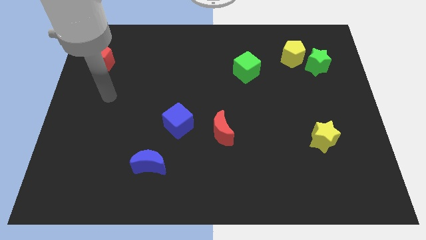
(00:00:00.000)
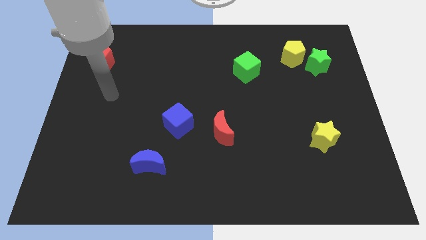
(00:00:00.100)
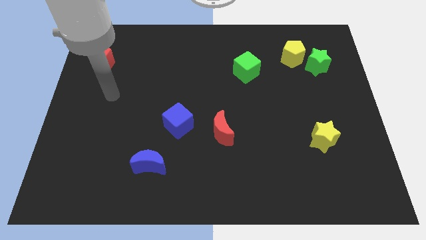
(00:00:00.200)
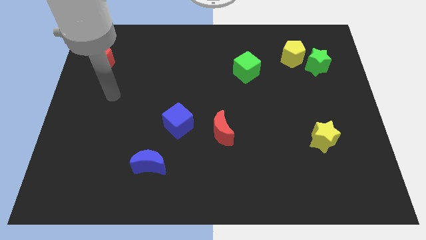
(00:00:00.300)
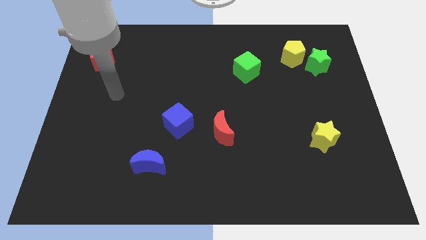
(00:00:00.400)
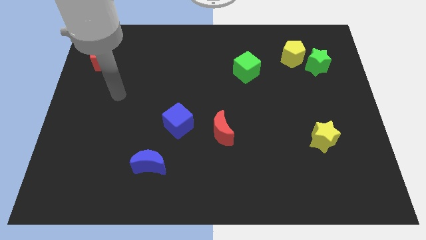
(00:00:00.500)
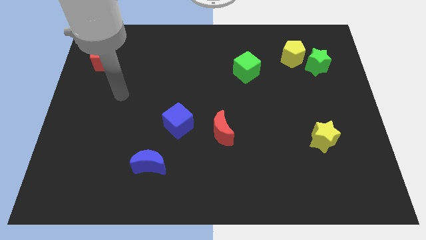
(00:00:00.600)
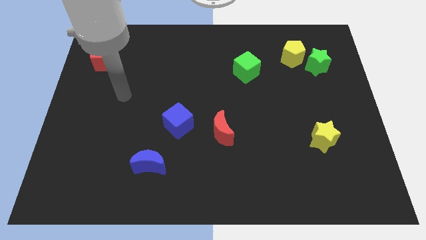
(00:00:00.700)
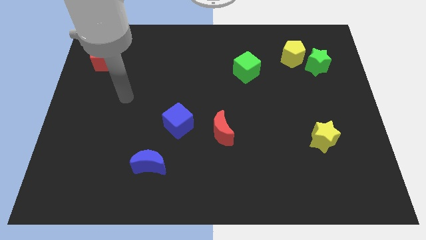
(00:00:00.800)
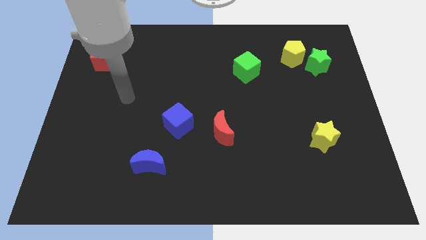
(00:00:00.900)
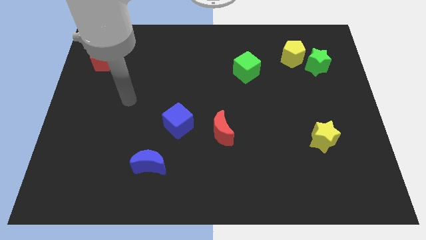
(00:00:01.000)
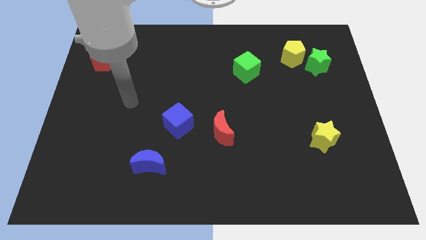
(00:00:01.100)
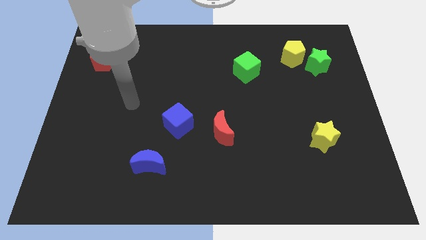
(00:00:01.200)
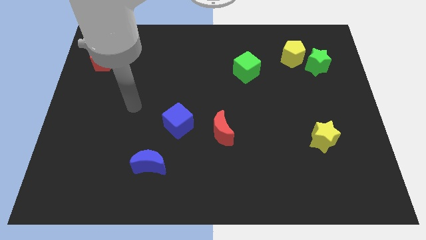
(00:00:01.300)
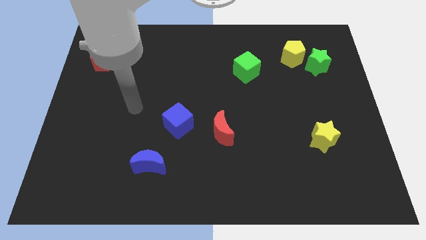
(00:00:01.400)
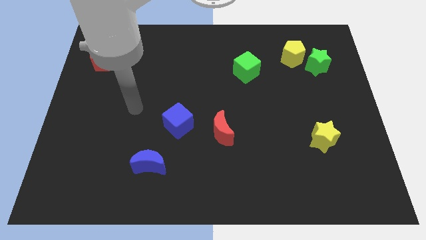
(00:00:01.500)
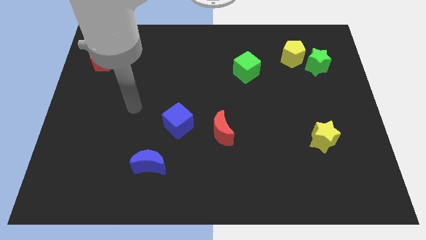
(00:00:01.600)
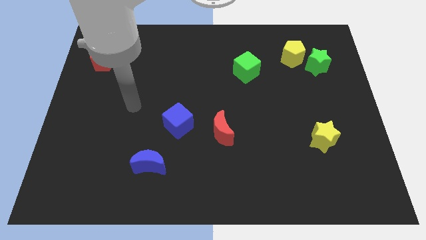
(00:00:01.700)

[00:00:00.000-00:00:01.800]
move your arm towards the blue cube

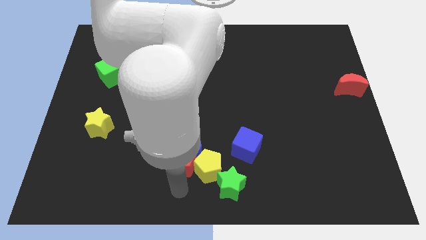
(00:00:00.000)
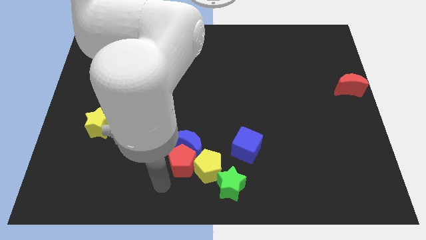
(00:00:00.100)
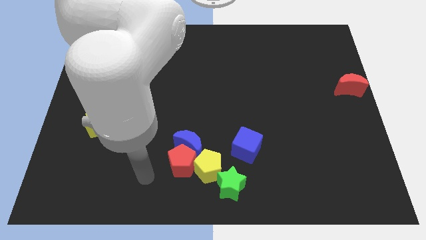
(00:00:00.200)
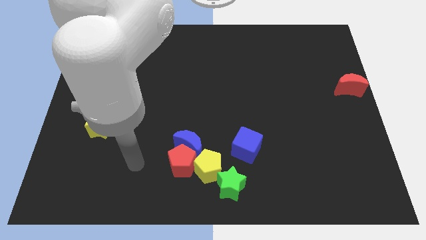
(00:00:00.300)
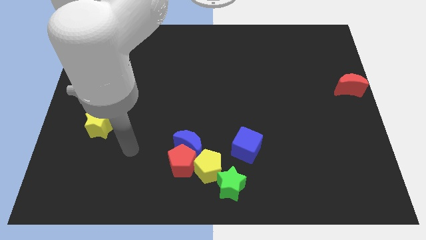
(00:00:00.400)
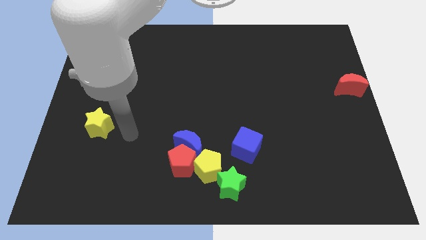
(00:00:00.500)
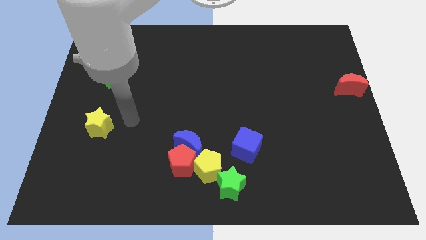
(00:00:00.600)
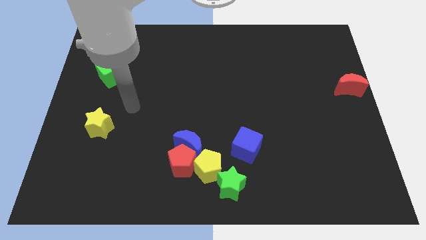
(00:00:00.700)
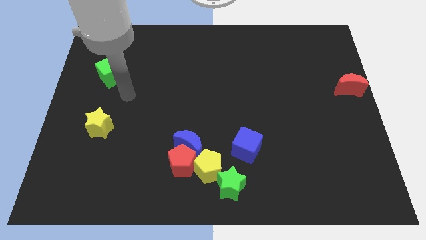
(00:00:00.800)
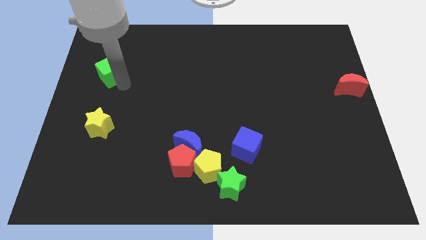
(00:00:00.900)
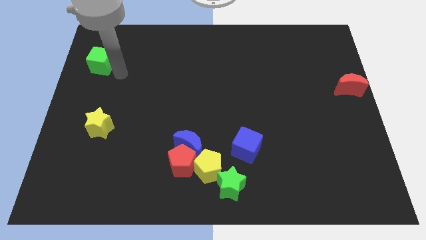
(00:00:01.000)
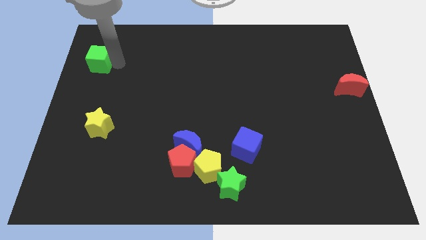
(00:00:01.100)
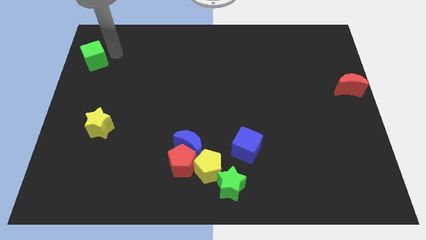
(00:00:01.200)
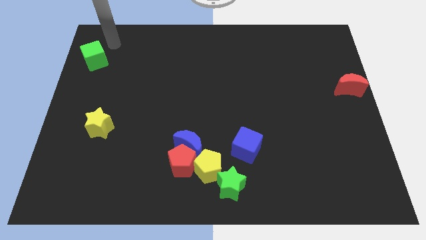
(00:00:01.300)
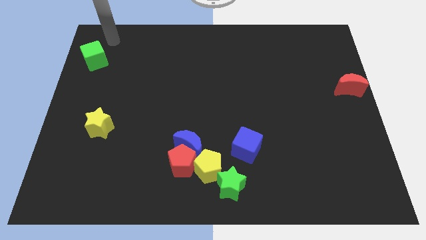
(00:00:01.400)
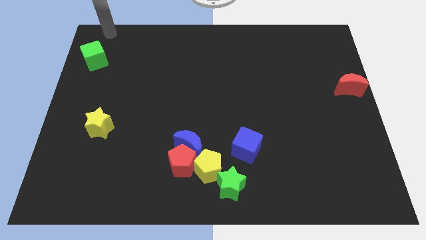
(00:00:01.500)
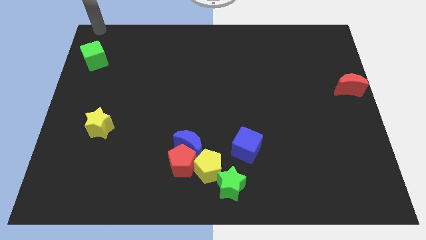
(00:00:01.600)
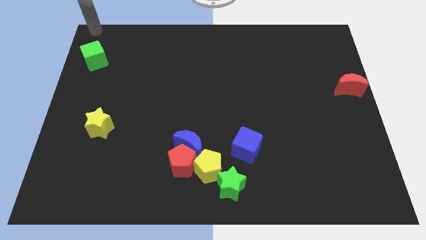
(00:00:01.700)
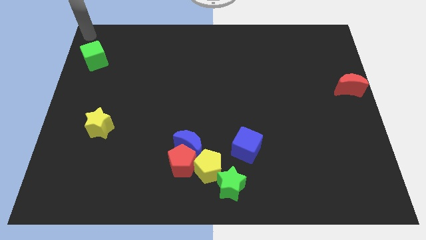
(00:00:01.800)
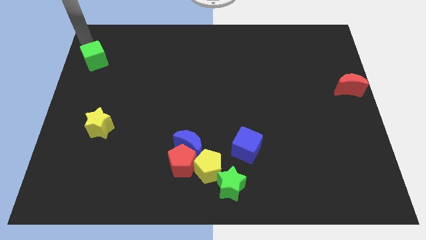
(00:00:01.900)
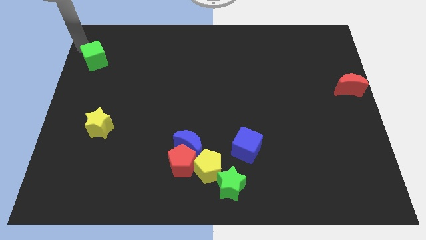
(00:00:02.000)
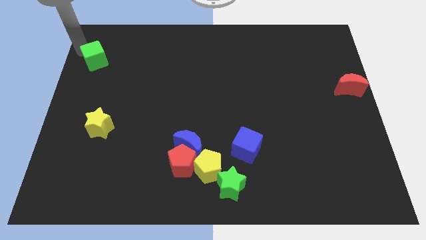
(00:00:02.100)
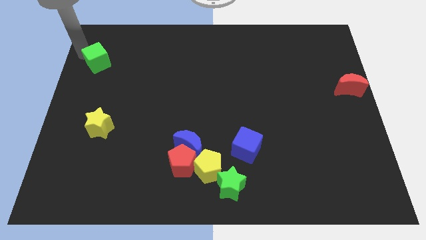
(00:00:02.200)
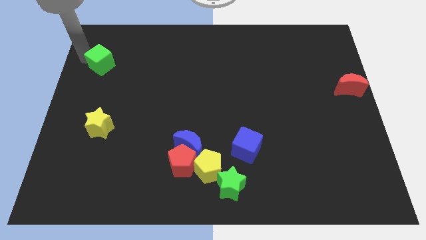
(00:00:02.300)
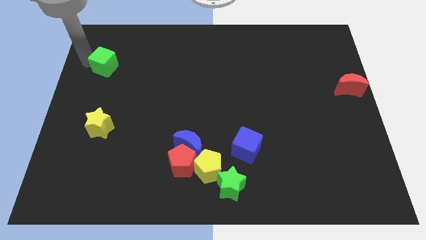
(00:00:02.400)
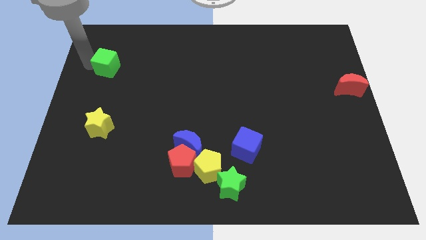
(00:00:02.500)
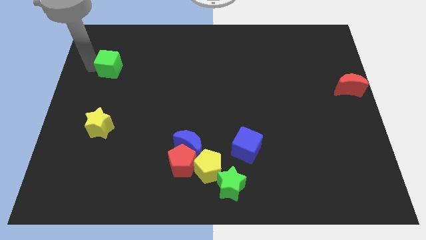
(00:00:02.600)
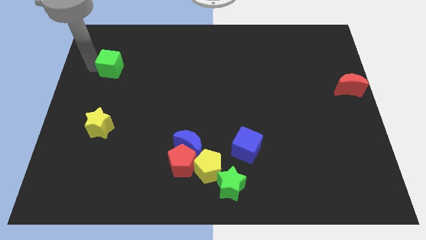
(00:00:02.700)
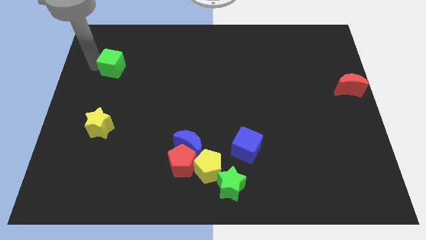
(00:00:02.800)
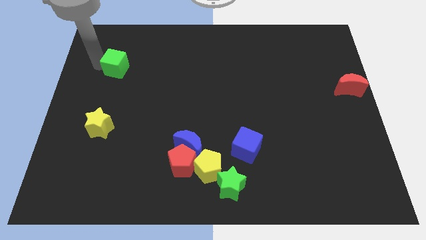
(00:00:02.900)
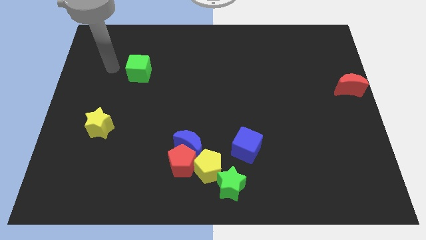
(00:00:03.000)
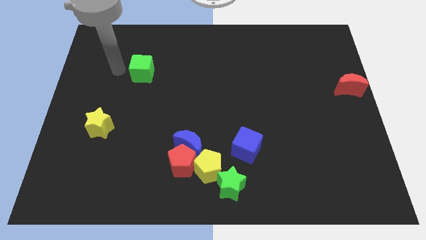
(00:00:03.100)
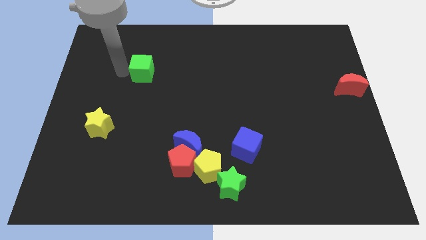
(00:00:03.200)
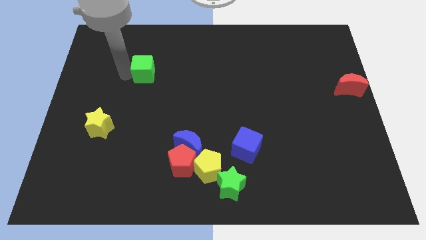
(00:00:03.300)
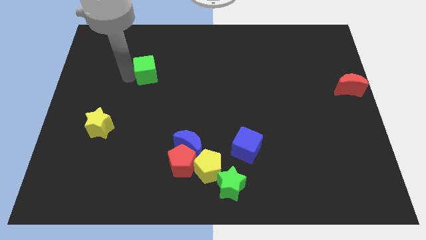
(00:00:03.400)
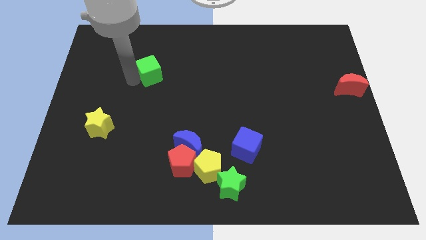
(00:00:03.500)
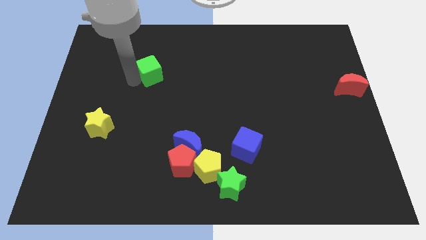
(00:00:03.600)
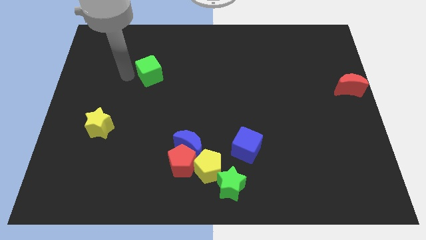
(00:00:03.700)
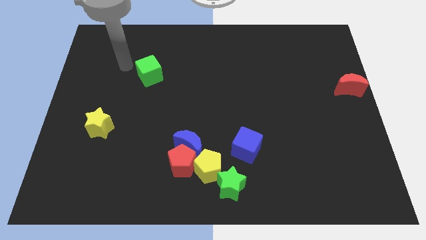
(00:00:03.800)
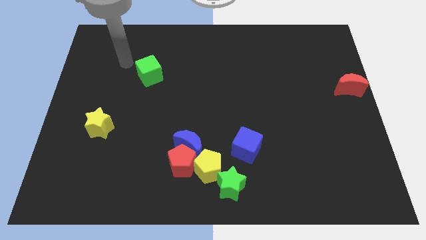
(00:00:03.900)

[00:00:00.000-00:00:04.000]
push the green cube to the top left of the blue crescent

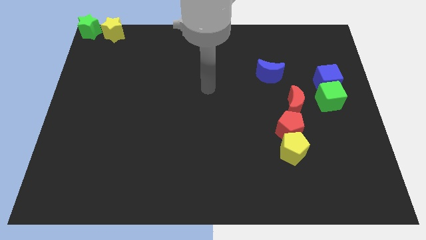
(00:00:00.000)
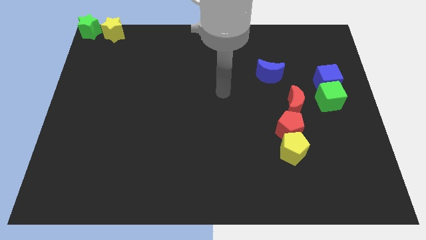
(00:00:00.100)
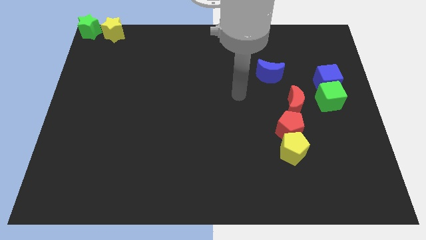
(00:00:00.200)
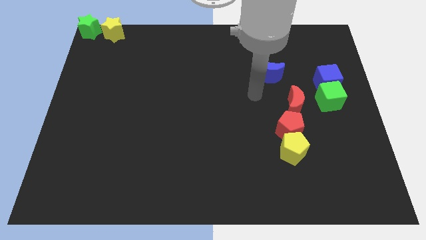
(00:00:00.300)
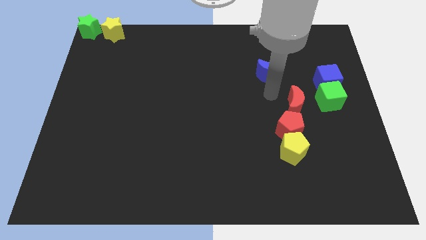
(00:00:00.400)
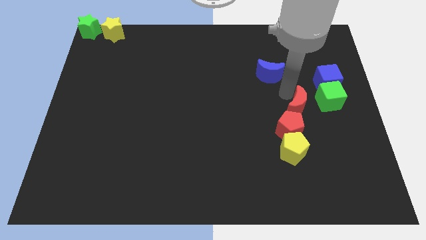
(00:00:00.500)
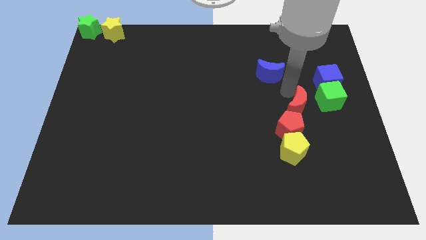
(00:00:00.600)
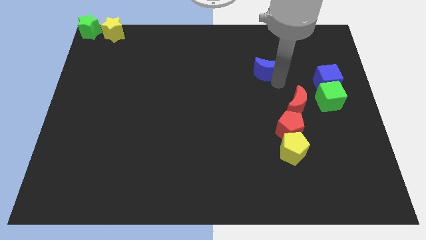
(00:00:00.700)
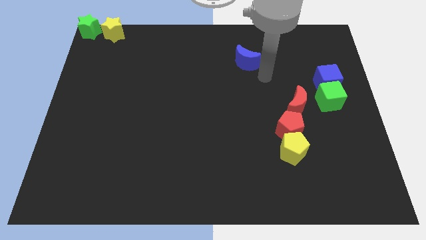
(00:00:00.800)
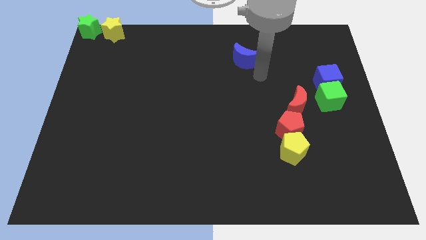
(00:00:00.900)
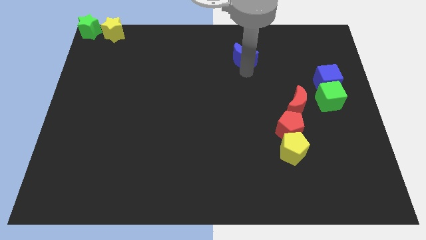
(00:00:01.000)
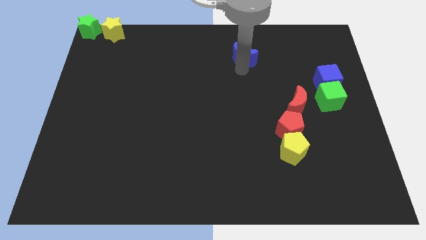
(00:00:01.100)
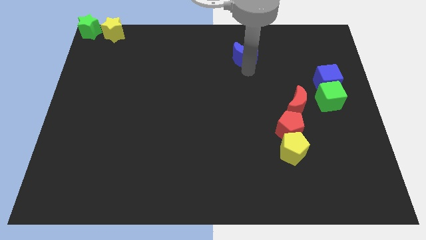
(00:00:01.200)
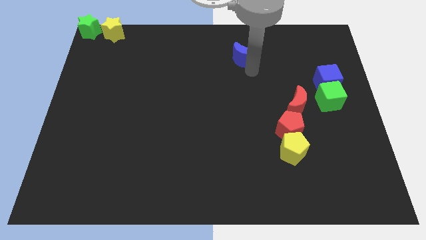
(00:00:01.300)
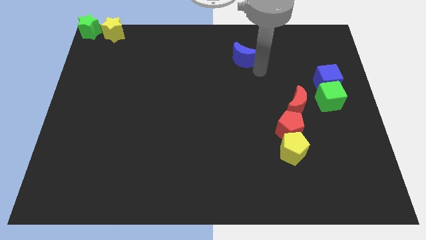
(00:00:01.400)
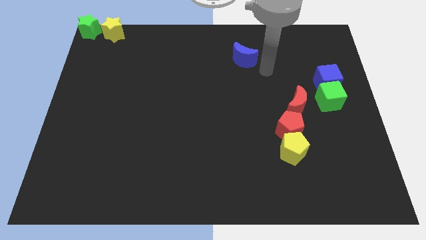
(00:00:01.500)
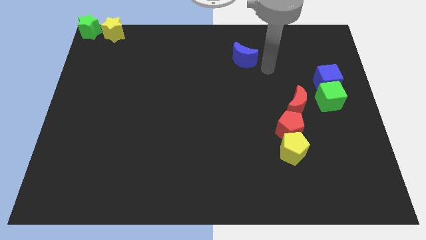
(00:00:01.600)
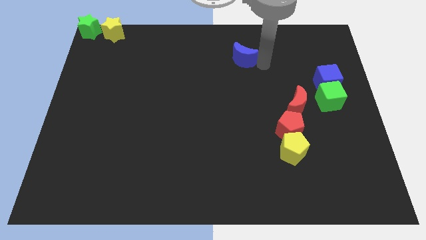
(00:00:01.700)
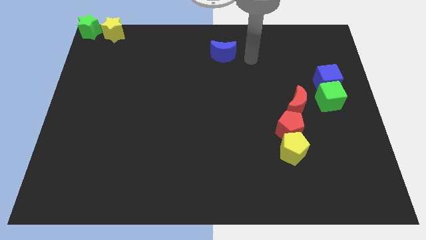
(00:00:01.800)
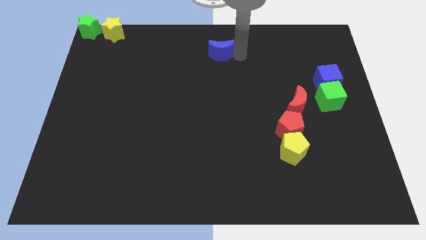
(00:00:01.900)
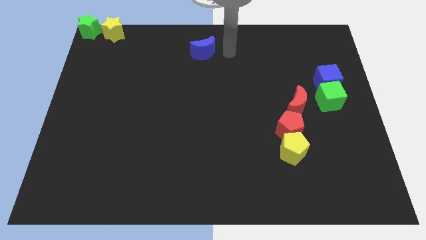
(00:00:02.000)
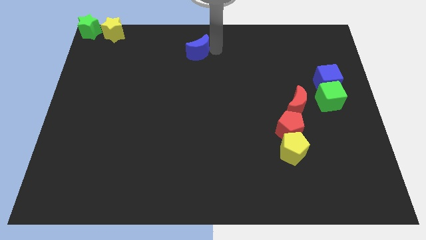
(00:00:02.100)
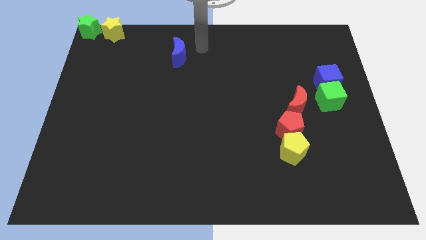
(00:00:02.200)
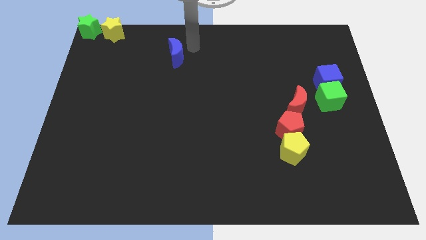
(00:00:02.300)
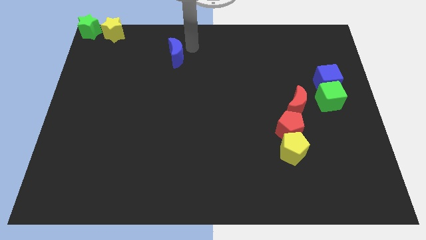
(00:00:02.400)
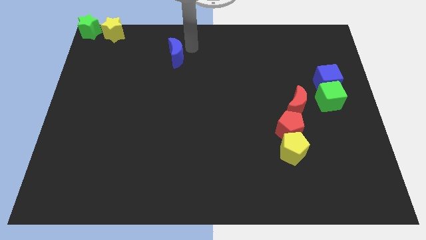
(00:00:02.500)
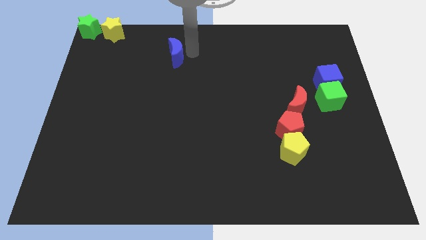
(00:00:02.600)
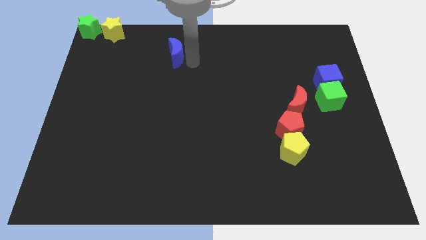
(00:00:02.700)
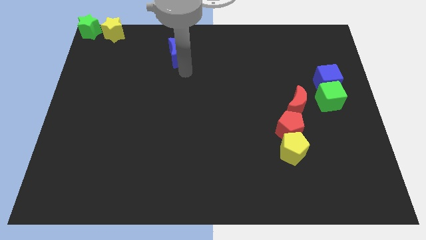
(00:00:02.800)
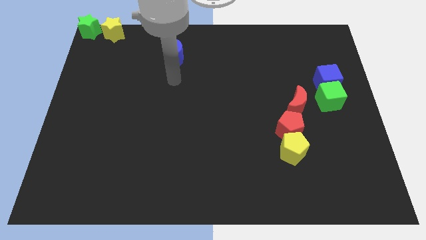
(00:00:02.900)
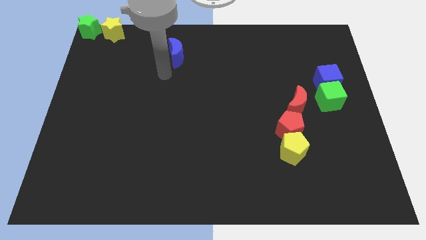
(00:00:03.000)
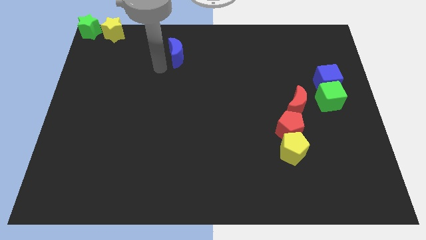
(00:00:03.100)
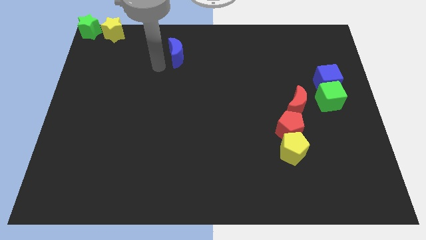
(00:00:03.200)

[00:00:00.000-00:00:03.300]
push the blue moon towards the top left corner
